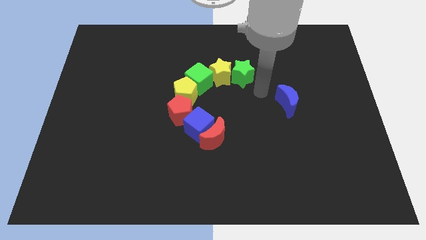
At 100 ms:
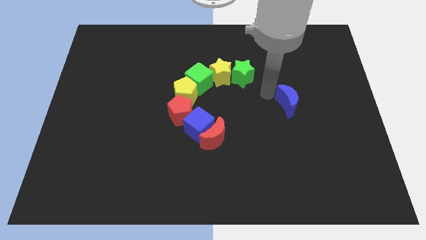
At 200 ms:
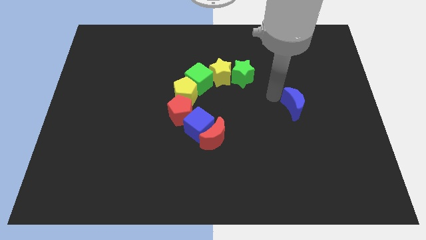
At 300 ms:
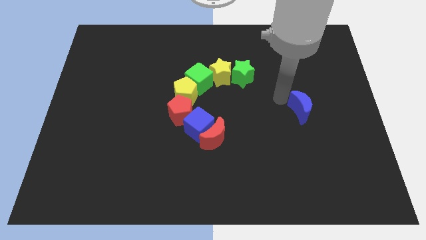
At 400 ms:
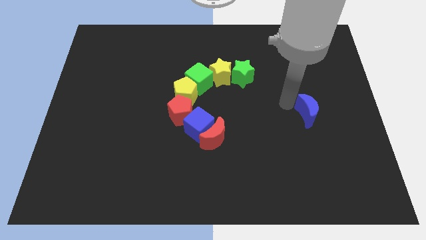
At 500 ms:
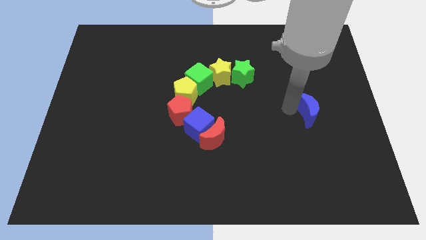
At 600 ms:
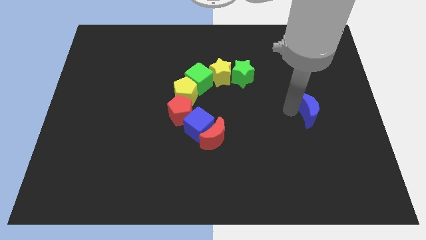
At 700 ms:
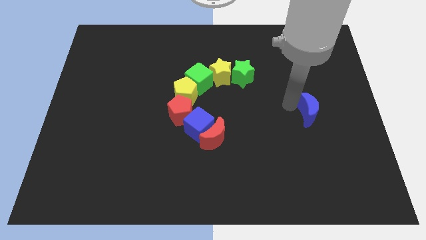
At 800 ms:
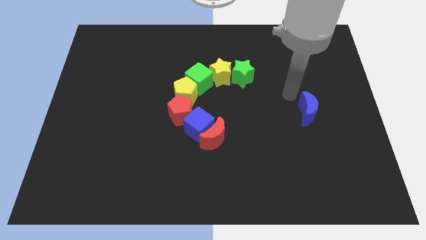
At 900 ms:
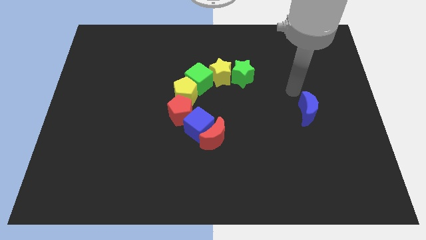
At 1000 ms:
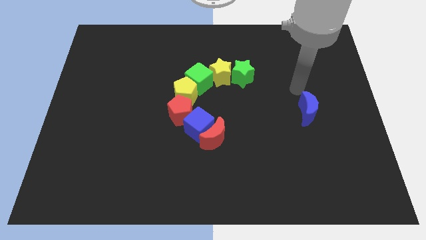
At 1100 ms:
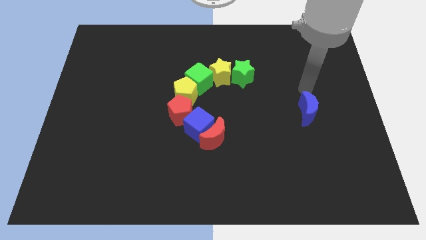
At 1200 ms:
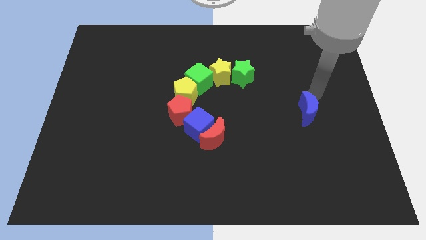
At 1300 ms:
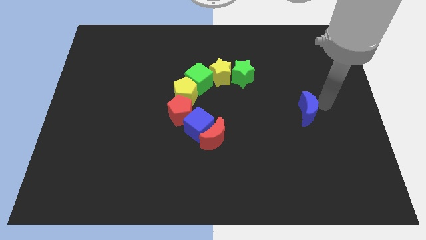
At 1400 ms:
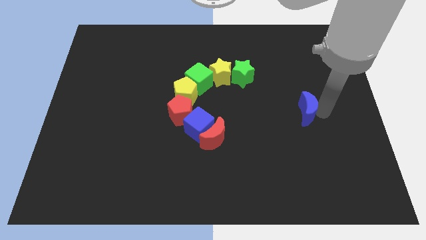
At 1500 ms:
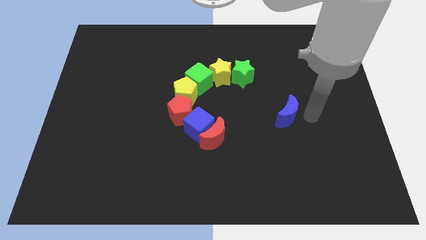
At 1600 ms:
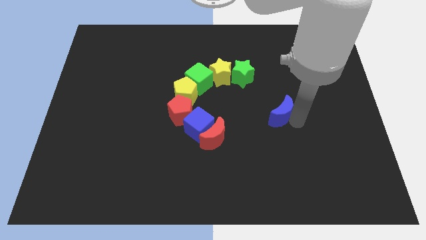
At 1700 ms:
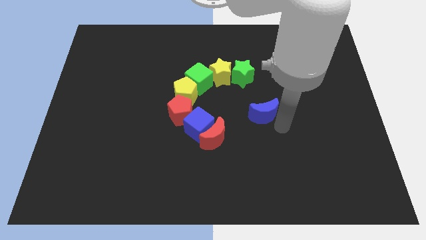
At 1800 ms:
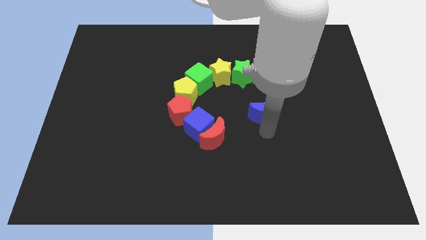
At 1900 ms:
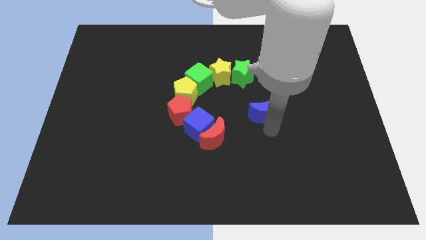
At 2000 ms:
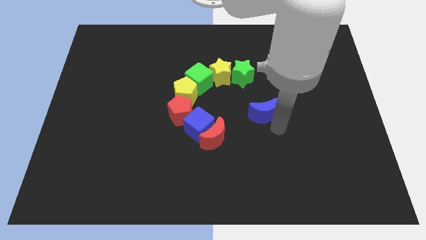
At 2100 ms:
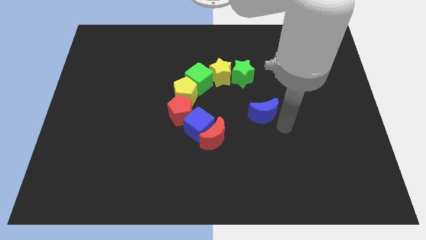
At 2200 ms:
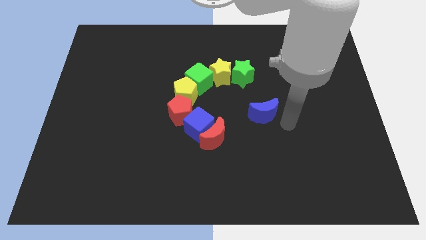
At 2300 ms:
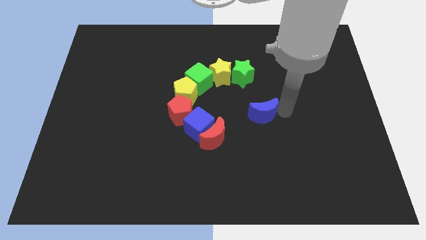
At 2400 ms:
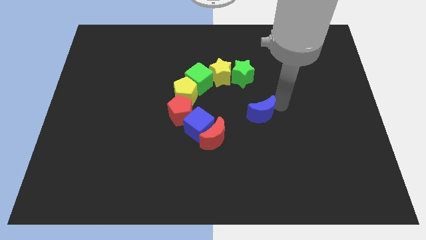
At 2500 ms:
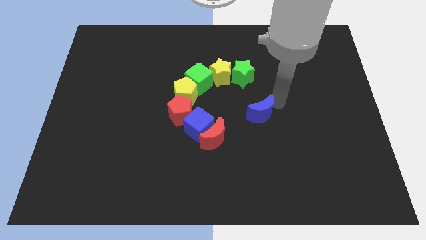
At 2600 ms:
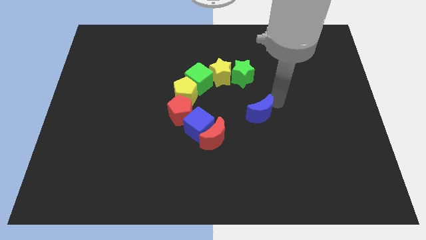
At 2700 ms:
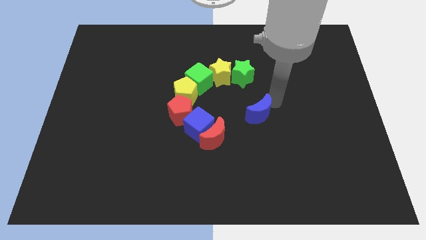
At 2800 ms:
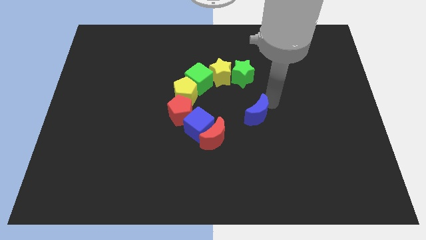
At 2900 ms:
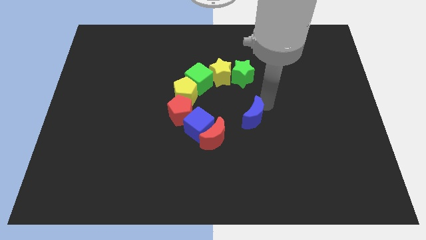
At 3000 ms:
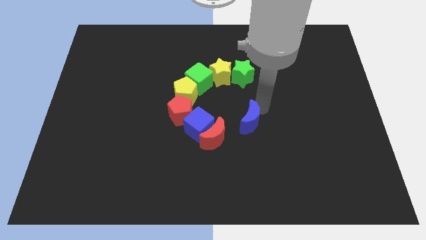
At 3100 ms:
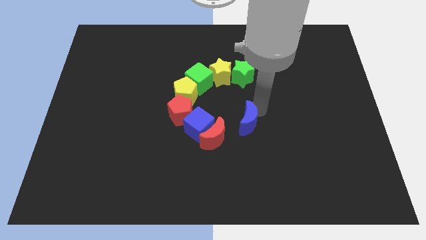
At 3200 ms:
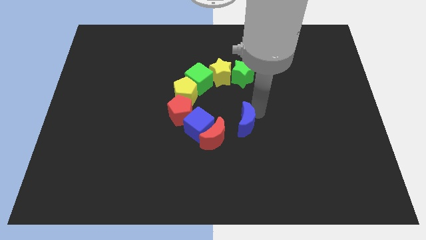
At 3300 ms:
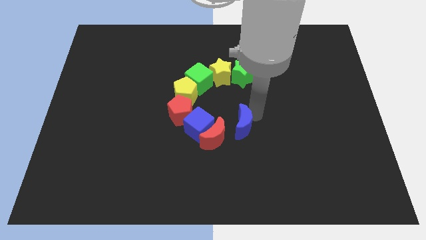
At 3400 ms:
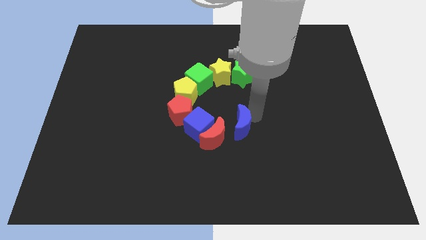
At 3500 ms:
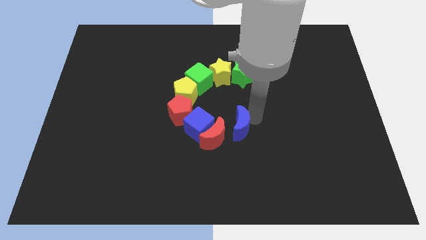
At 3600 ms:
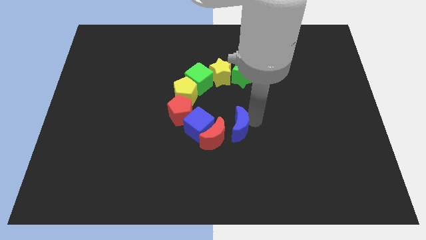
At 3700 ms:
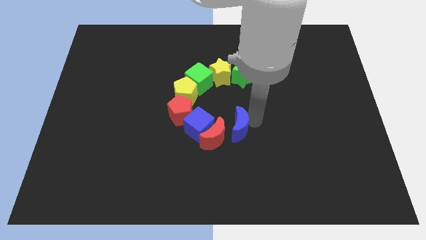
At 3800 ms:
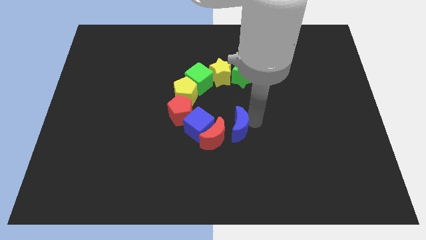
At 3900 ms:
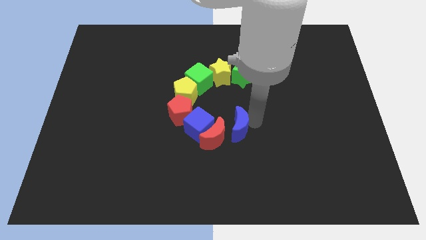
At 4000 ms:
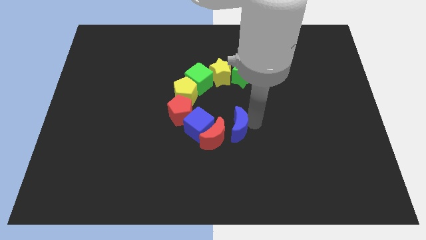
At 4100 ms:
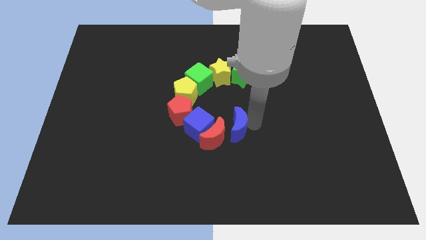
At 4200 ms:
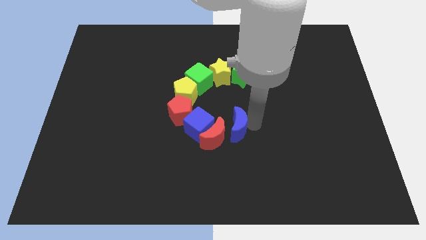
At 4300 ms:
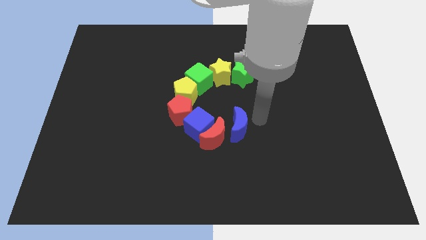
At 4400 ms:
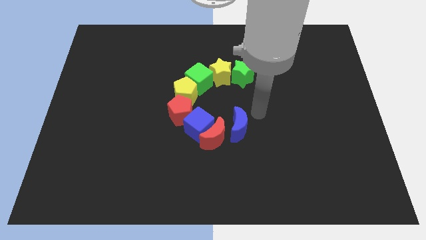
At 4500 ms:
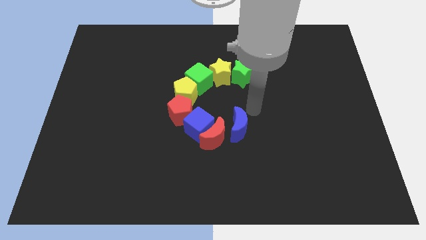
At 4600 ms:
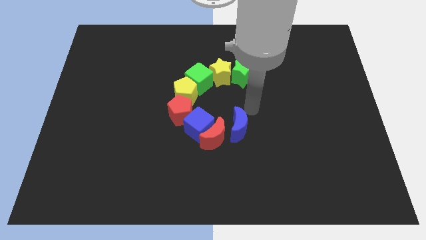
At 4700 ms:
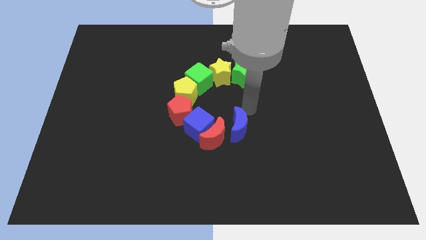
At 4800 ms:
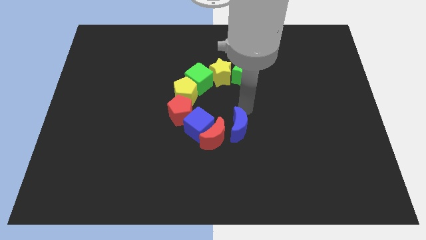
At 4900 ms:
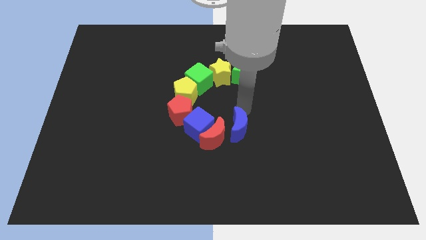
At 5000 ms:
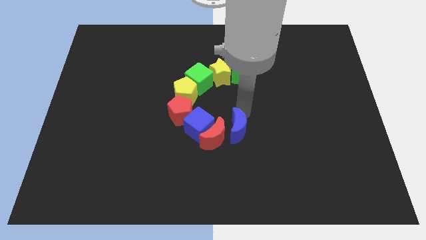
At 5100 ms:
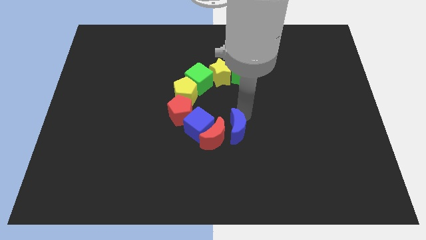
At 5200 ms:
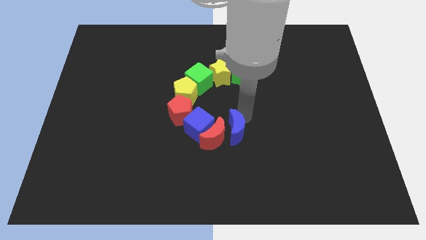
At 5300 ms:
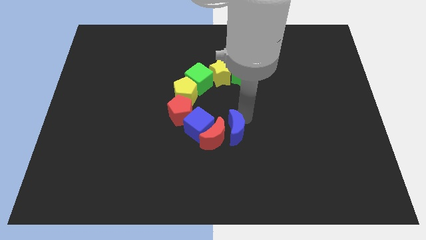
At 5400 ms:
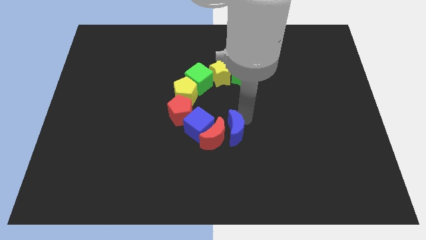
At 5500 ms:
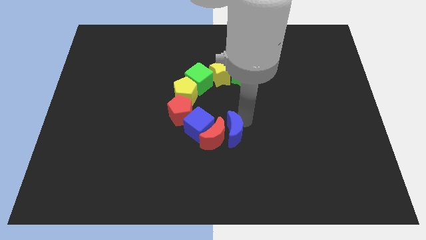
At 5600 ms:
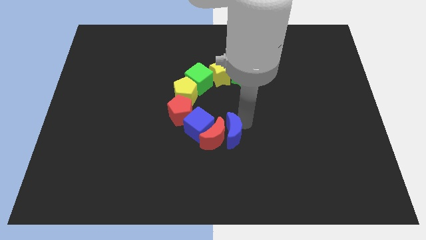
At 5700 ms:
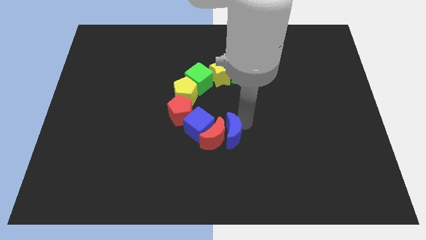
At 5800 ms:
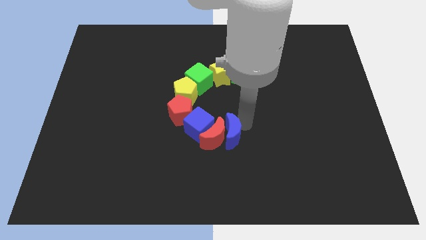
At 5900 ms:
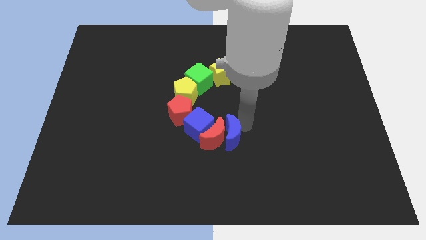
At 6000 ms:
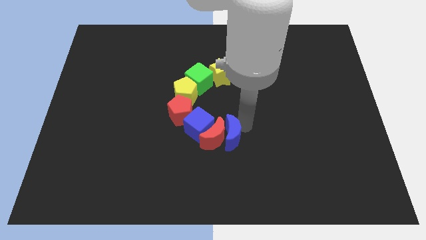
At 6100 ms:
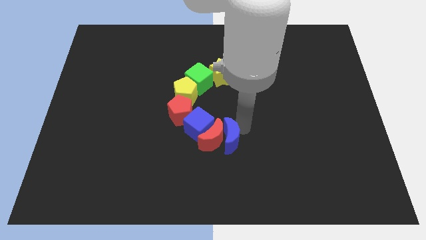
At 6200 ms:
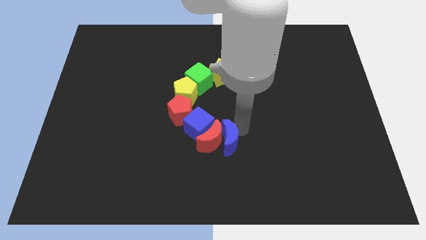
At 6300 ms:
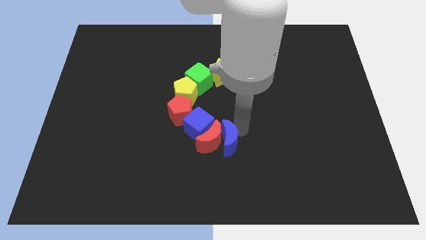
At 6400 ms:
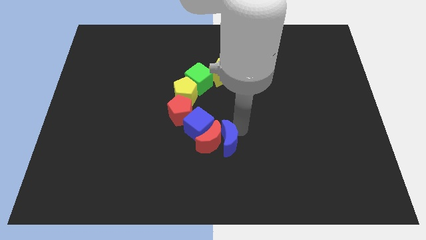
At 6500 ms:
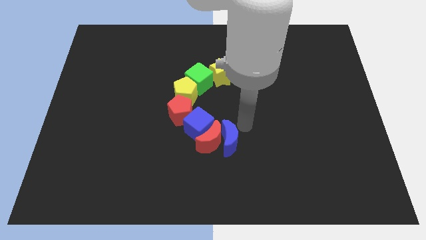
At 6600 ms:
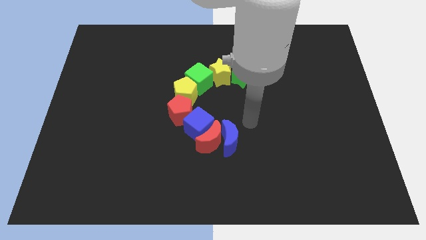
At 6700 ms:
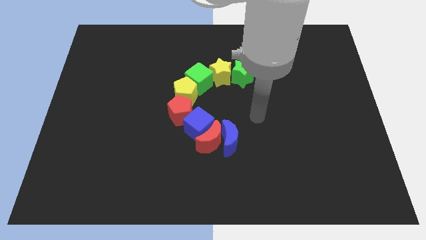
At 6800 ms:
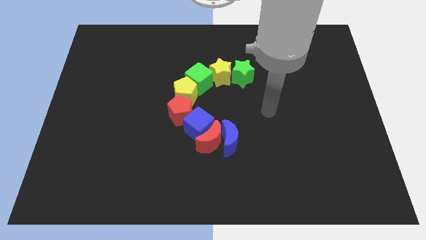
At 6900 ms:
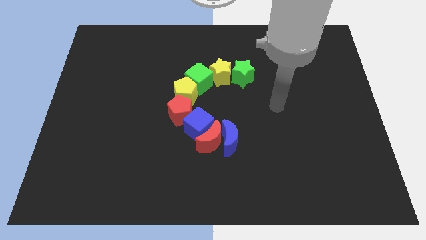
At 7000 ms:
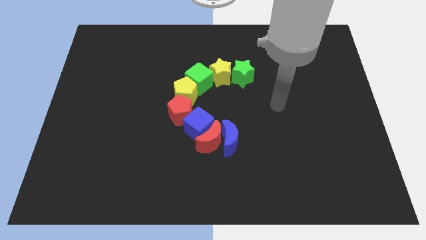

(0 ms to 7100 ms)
place blue moon to the right of the red moon

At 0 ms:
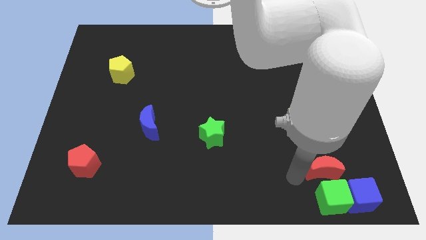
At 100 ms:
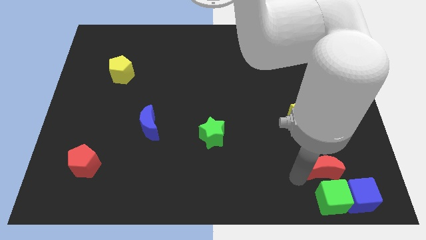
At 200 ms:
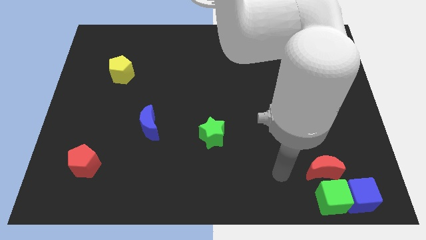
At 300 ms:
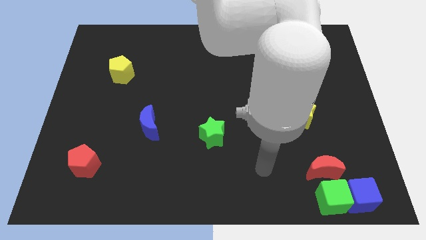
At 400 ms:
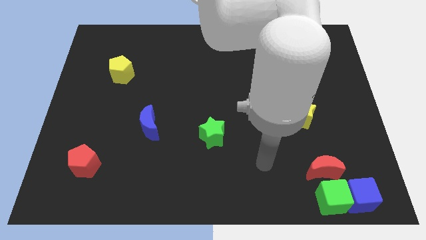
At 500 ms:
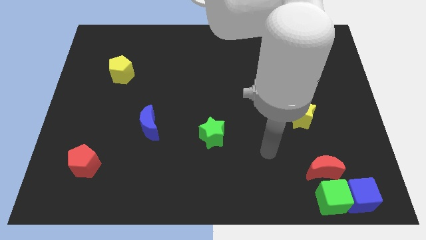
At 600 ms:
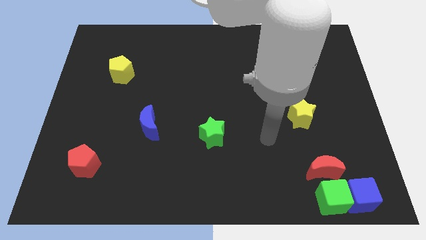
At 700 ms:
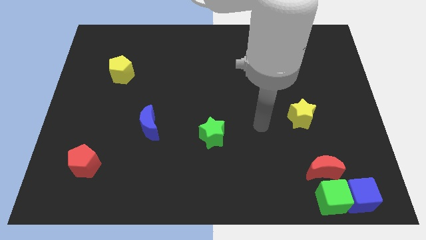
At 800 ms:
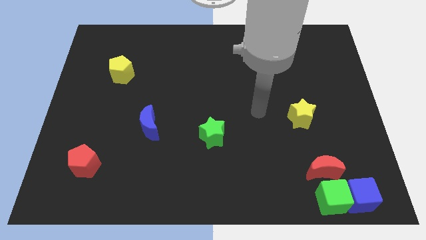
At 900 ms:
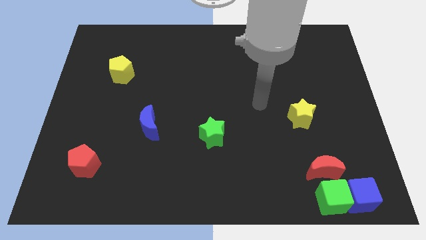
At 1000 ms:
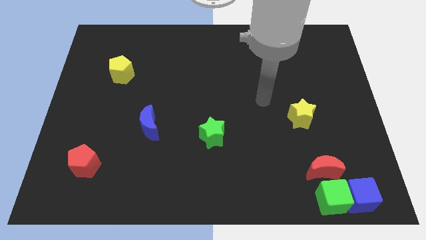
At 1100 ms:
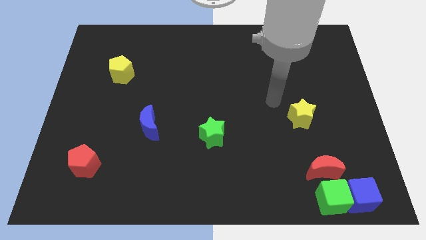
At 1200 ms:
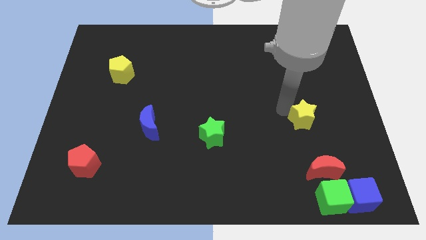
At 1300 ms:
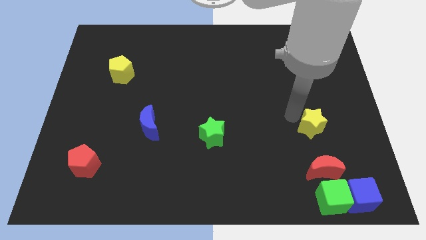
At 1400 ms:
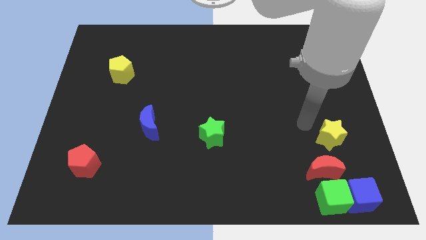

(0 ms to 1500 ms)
push the yellow star to the top of the red crescent

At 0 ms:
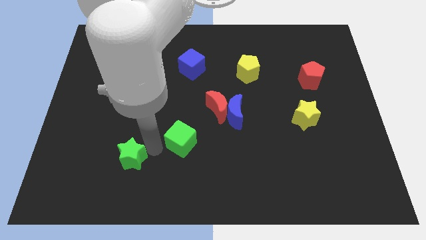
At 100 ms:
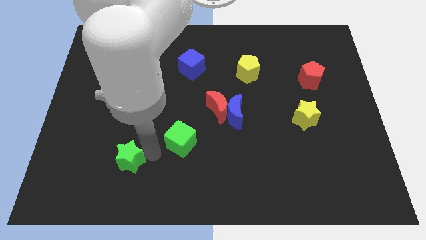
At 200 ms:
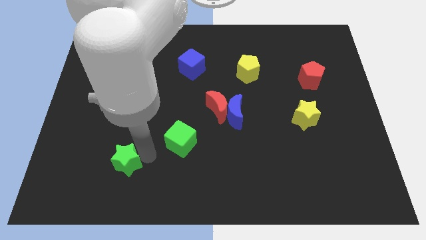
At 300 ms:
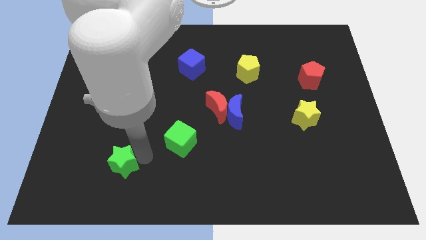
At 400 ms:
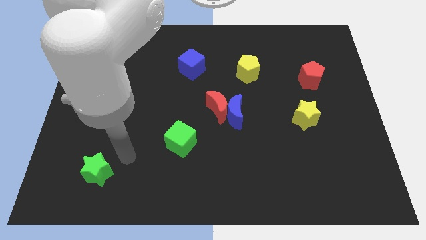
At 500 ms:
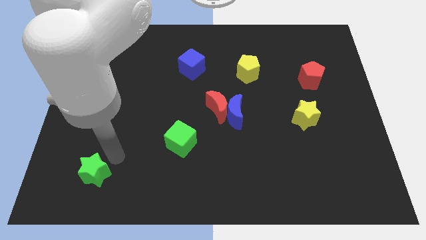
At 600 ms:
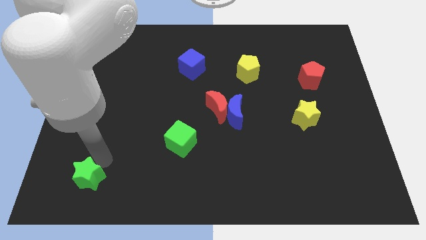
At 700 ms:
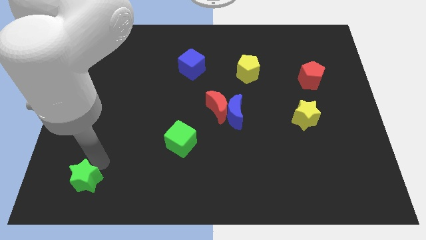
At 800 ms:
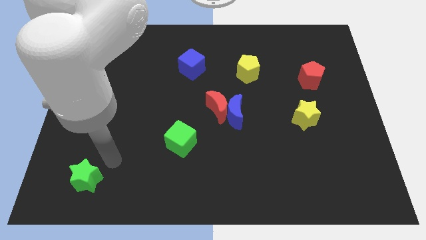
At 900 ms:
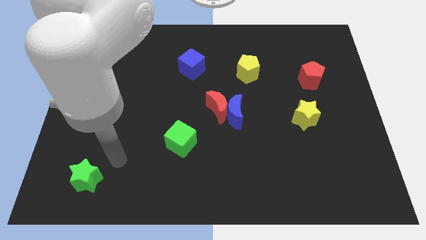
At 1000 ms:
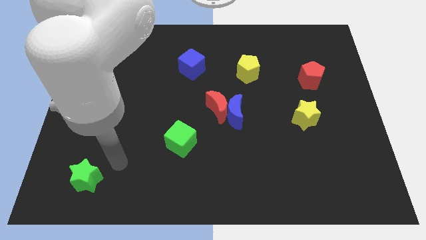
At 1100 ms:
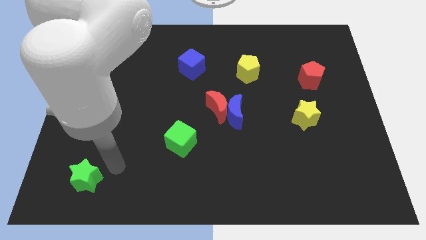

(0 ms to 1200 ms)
move the green star to the bottom left of the board
